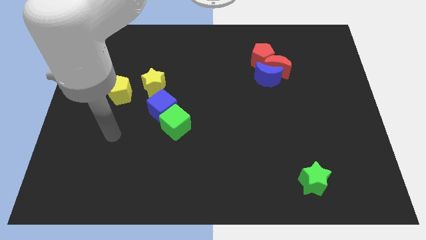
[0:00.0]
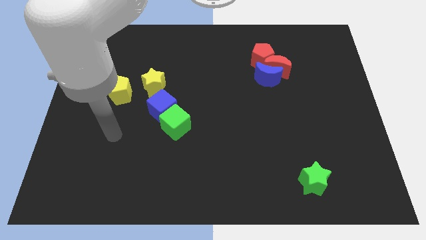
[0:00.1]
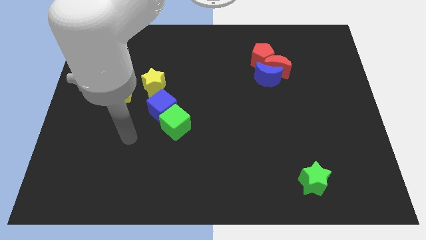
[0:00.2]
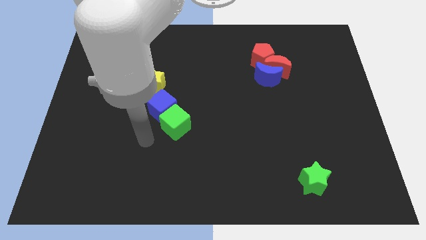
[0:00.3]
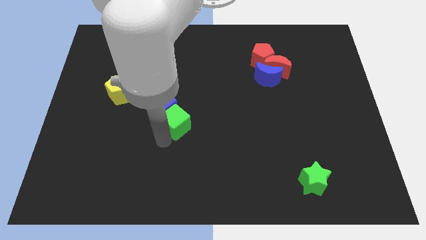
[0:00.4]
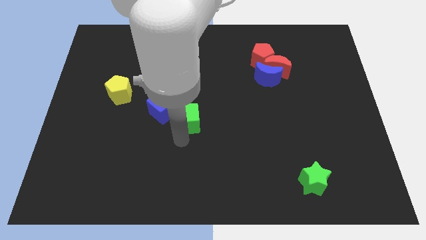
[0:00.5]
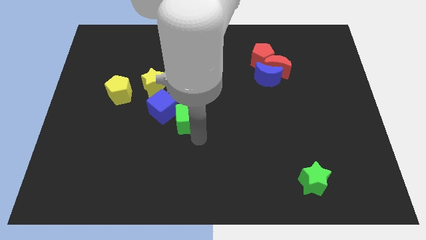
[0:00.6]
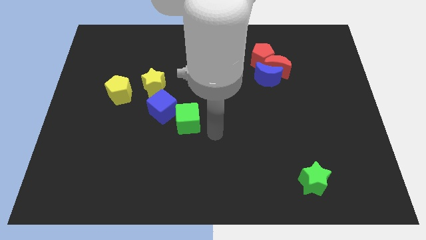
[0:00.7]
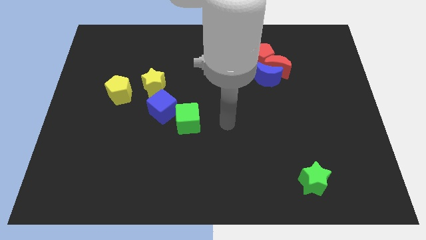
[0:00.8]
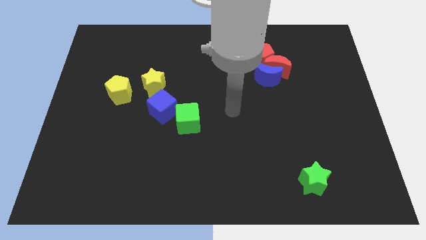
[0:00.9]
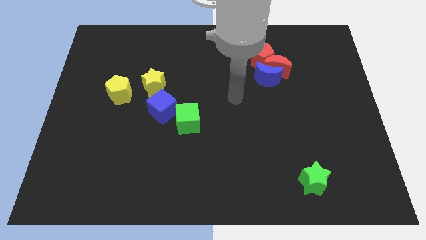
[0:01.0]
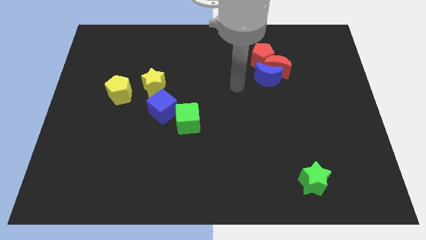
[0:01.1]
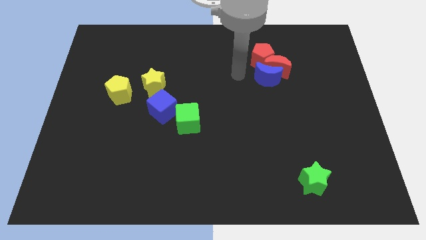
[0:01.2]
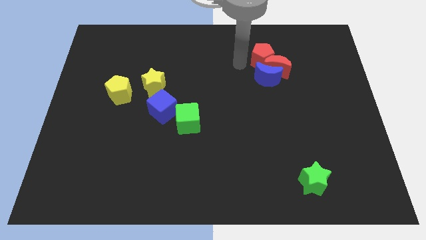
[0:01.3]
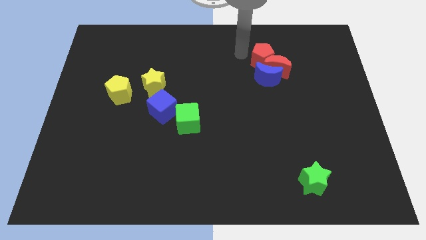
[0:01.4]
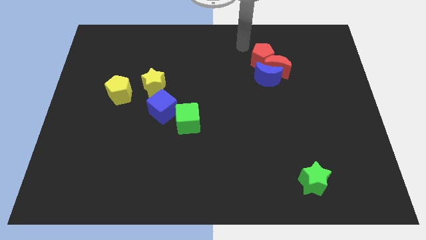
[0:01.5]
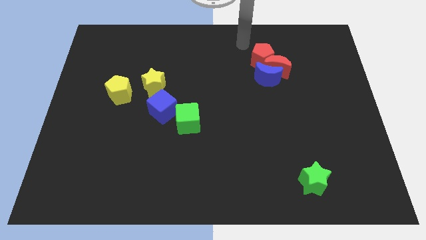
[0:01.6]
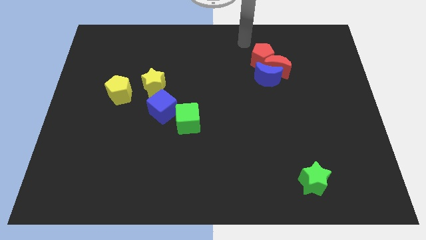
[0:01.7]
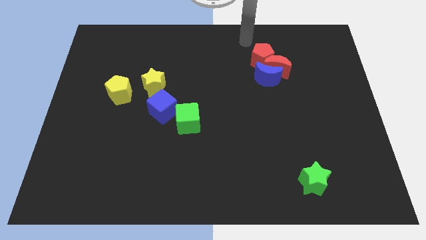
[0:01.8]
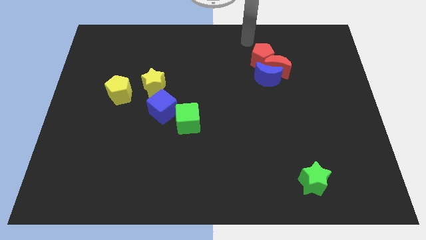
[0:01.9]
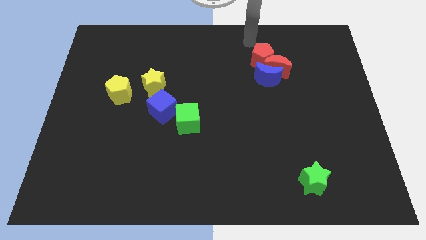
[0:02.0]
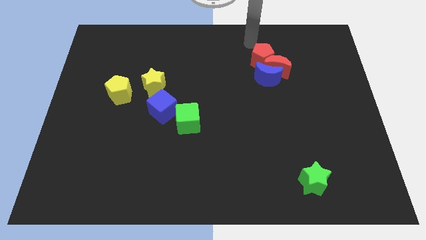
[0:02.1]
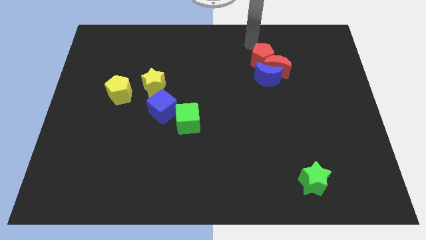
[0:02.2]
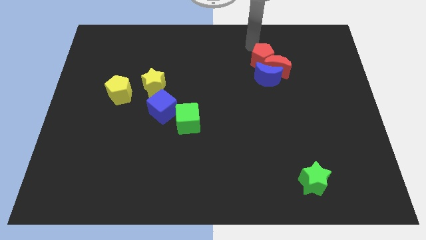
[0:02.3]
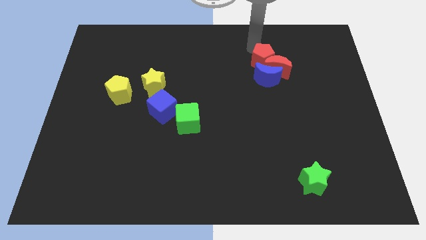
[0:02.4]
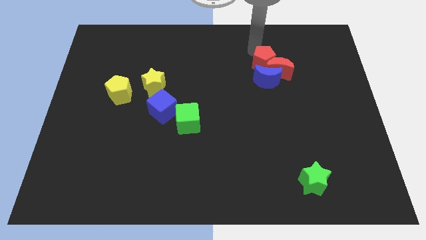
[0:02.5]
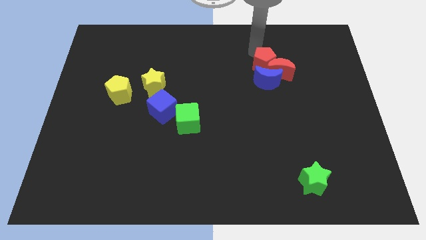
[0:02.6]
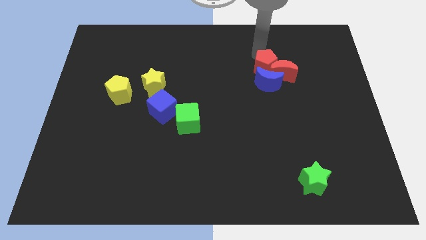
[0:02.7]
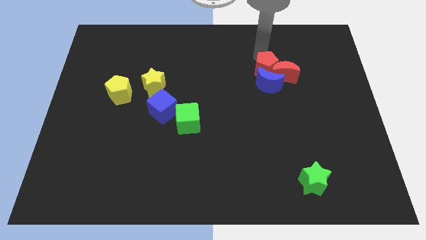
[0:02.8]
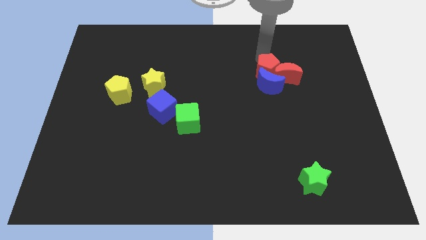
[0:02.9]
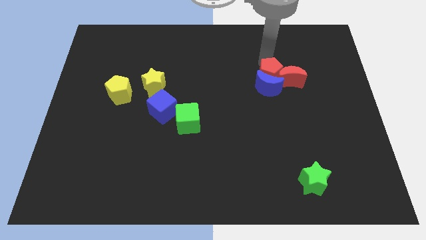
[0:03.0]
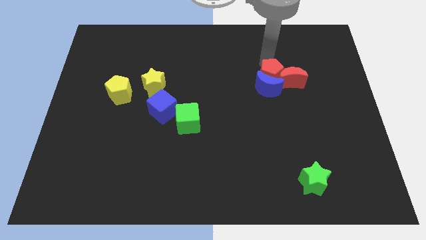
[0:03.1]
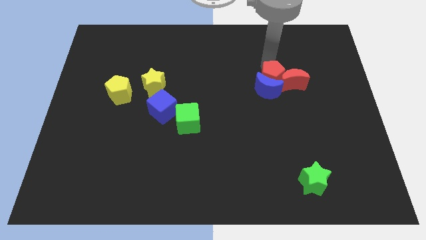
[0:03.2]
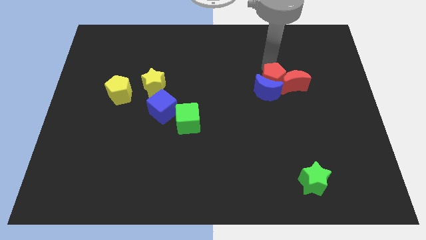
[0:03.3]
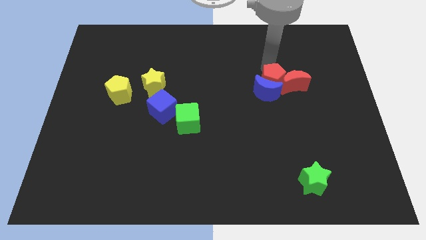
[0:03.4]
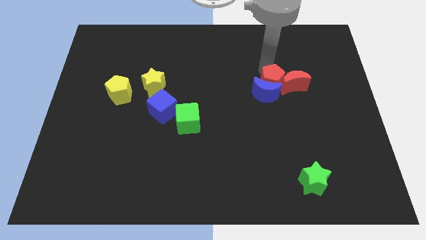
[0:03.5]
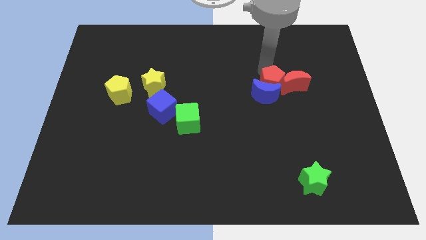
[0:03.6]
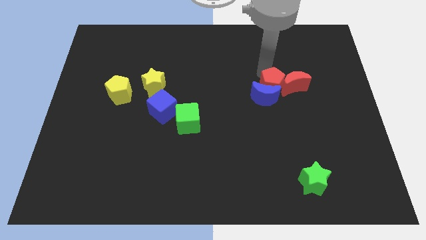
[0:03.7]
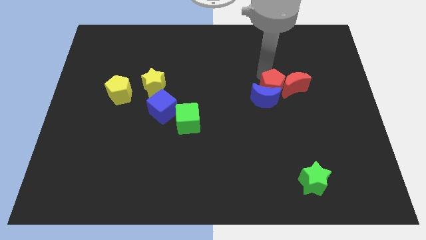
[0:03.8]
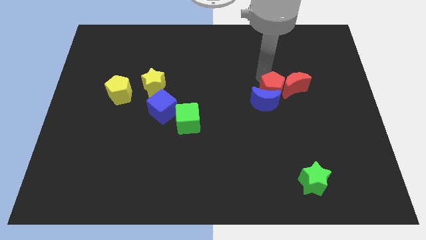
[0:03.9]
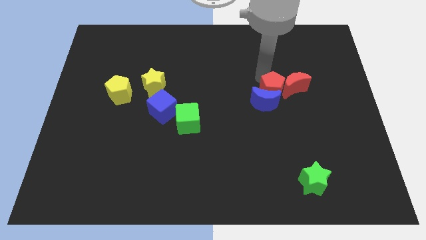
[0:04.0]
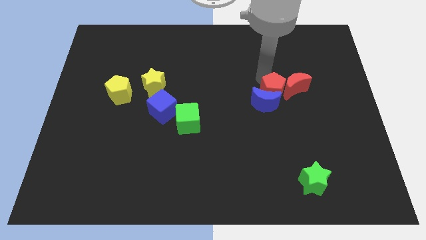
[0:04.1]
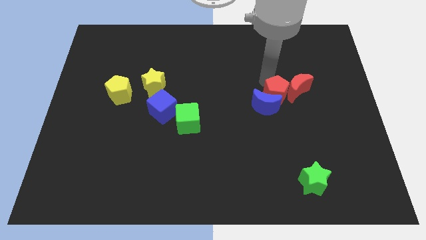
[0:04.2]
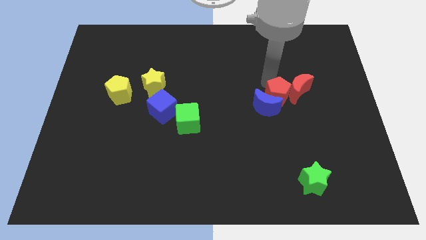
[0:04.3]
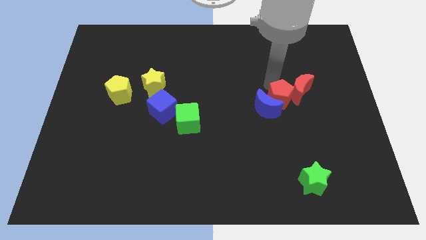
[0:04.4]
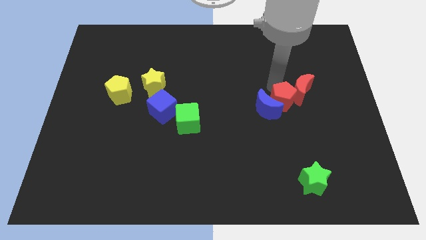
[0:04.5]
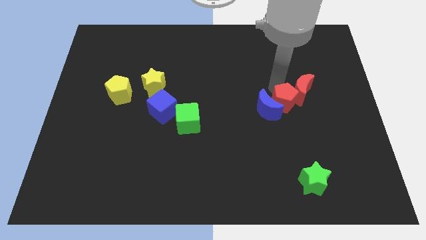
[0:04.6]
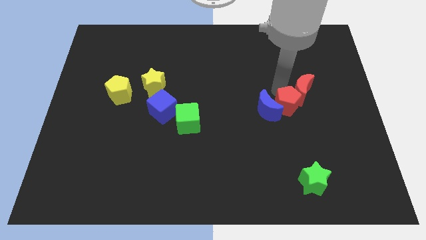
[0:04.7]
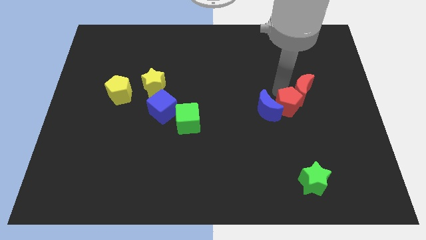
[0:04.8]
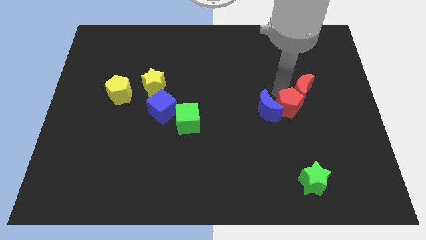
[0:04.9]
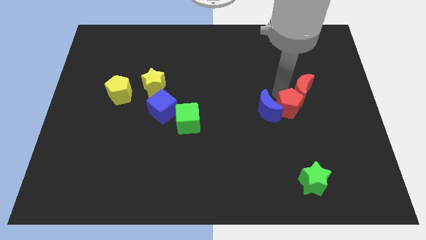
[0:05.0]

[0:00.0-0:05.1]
move the blue crescent using the red pentagon

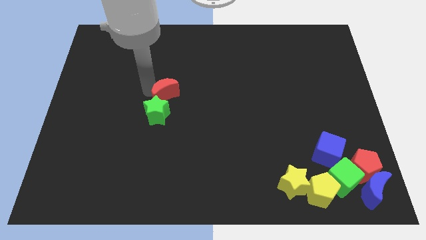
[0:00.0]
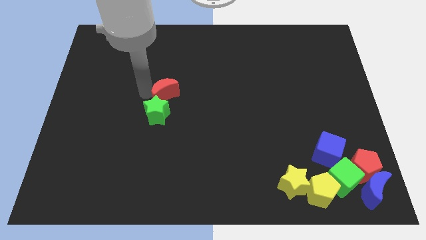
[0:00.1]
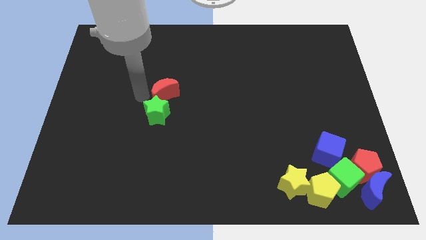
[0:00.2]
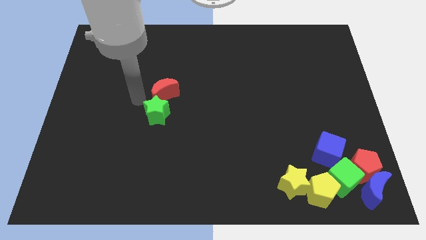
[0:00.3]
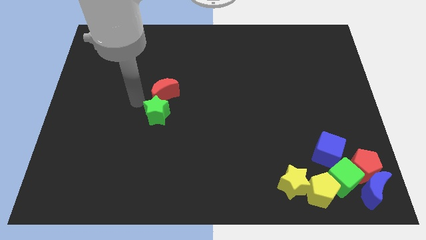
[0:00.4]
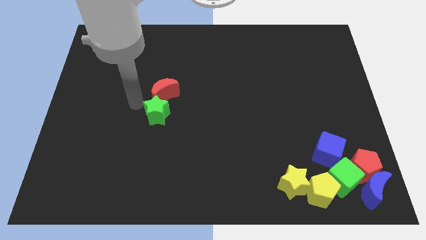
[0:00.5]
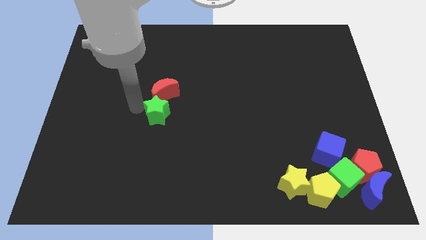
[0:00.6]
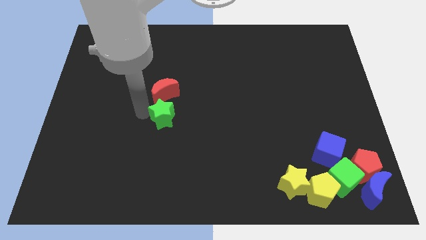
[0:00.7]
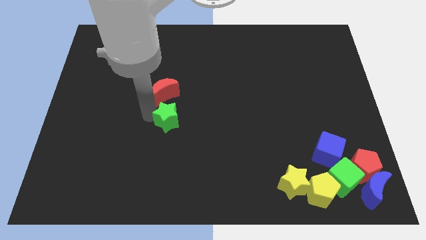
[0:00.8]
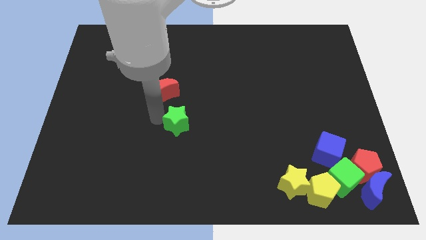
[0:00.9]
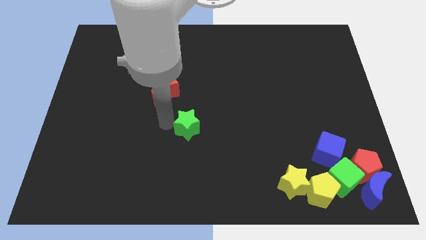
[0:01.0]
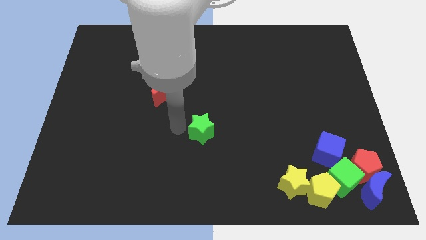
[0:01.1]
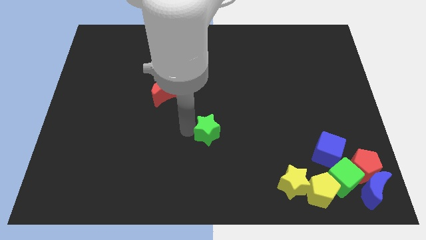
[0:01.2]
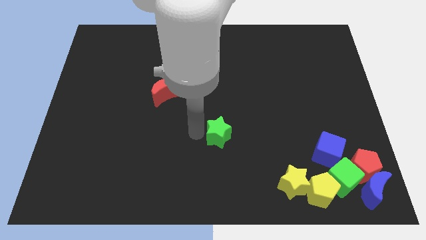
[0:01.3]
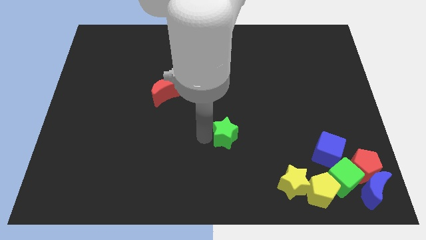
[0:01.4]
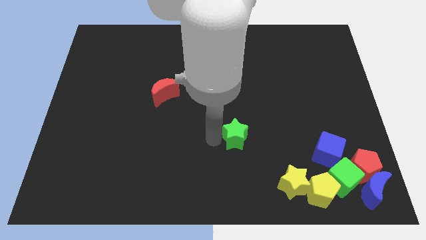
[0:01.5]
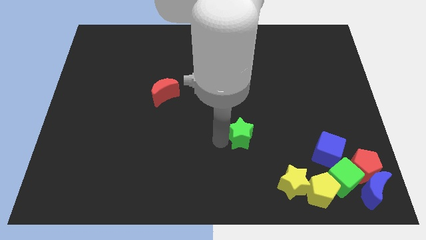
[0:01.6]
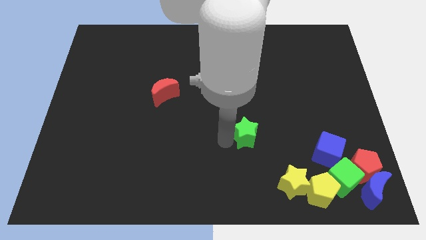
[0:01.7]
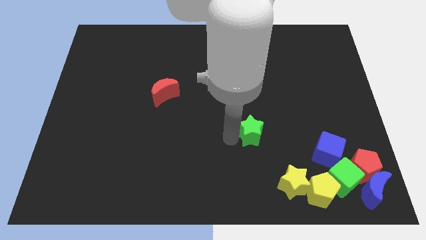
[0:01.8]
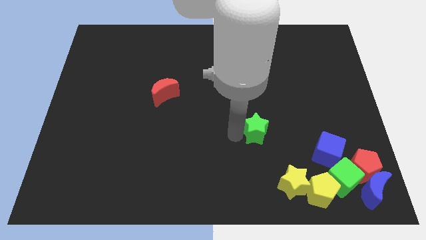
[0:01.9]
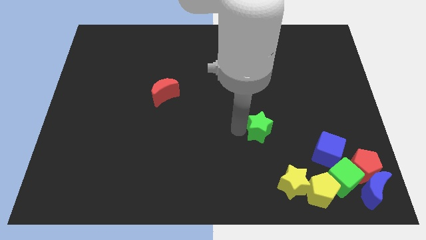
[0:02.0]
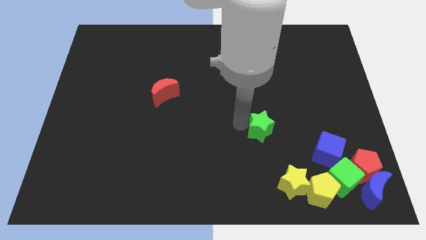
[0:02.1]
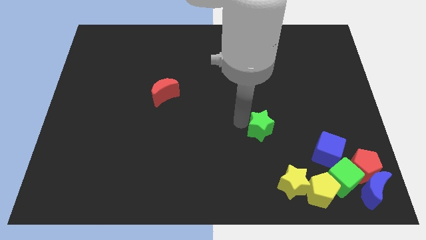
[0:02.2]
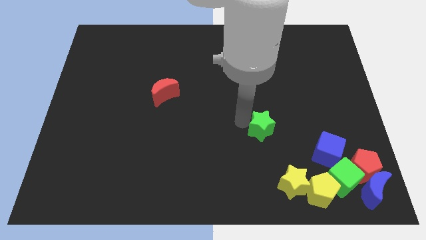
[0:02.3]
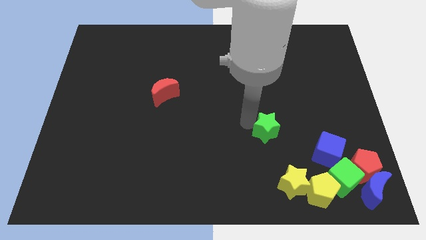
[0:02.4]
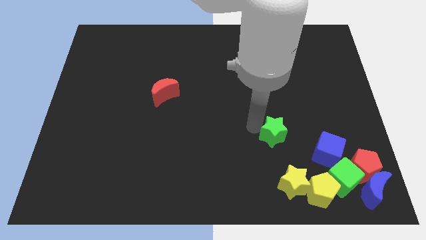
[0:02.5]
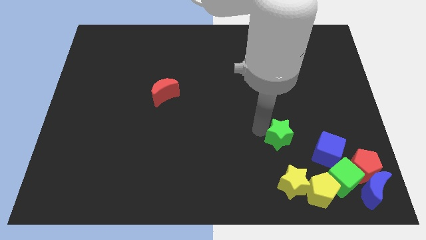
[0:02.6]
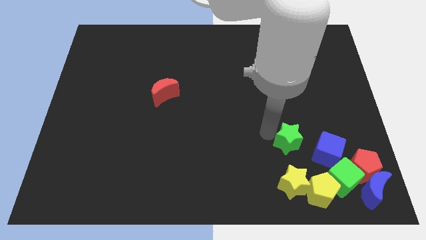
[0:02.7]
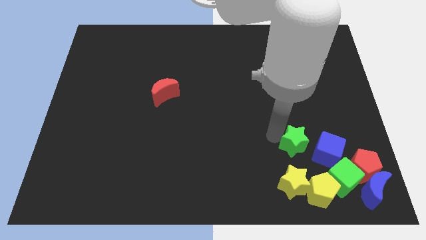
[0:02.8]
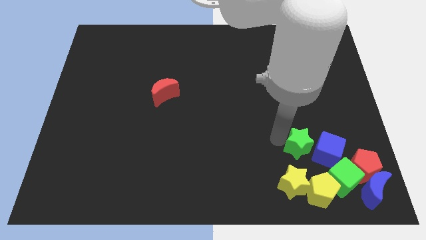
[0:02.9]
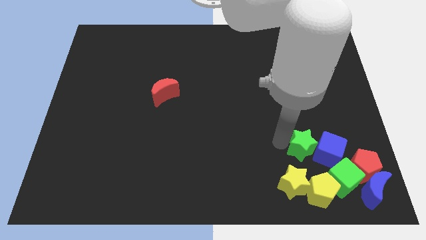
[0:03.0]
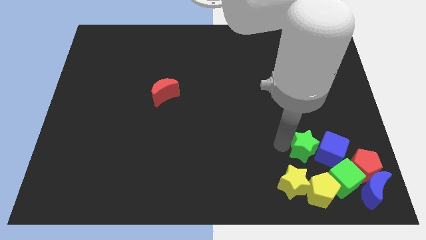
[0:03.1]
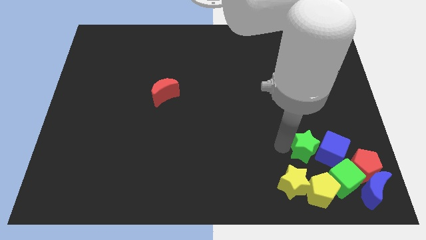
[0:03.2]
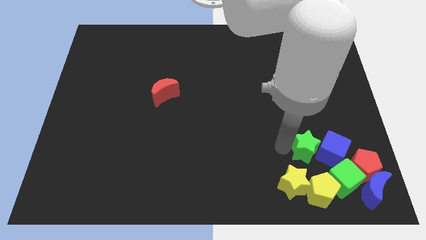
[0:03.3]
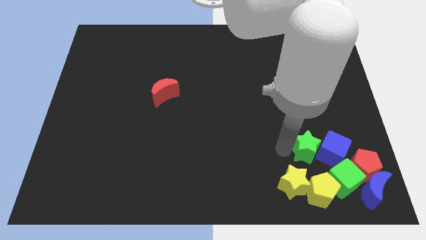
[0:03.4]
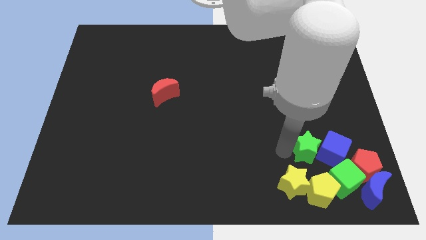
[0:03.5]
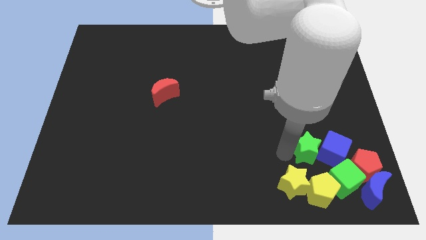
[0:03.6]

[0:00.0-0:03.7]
move the green star towards the top right of the yellow star

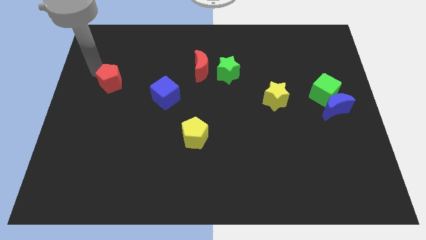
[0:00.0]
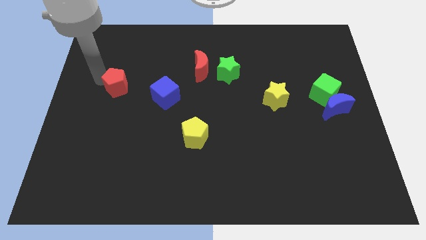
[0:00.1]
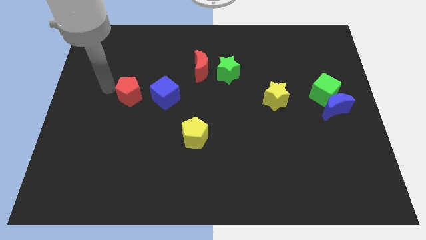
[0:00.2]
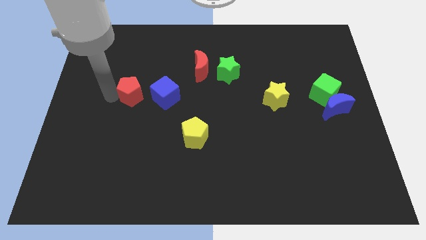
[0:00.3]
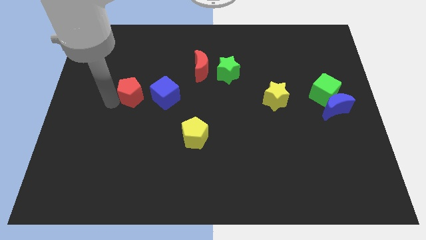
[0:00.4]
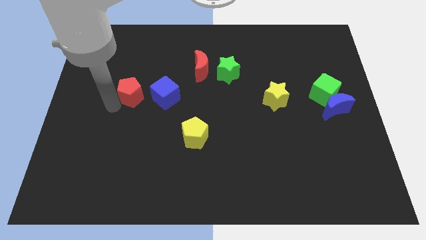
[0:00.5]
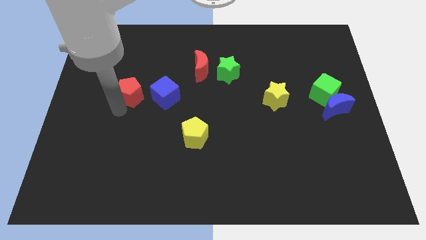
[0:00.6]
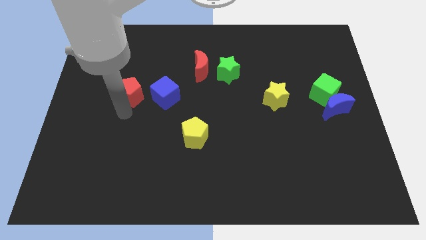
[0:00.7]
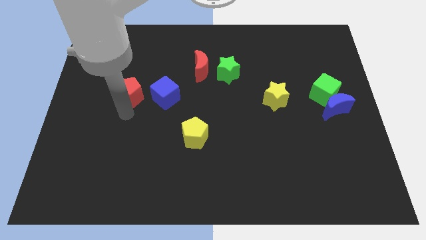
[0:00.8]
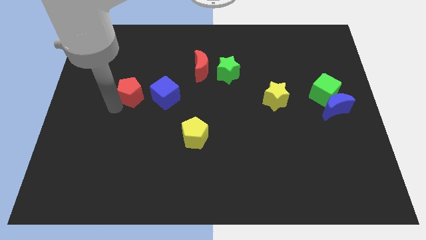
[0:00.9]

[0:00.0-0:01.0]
place the red pentagon to the left of the blue cube
